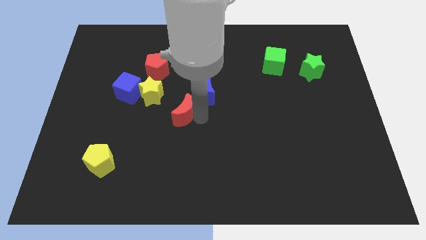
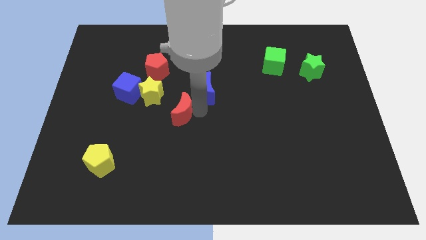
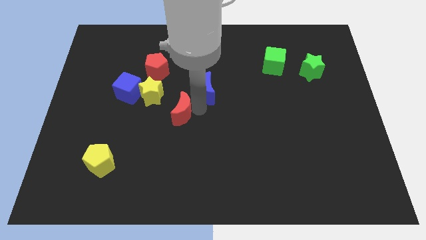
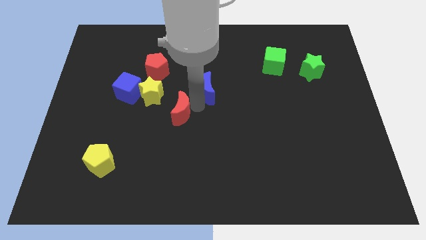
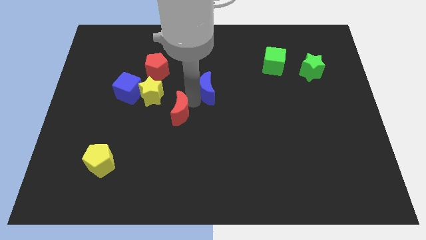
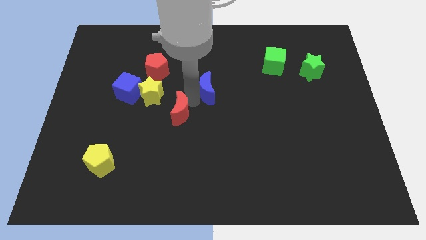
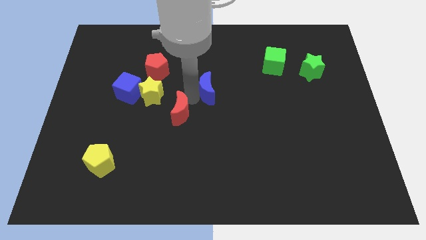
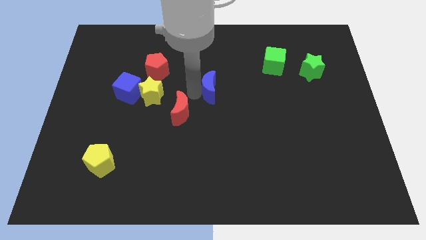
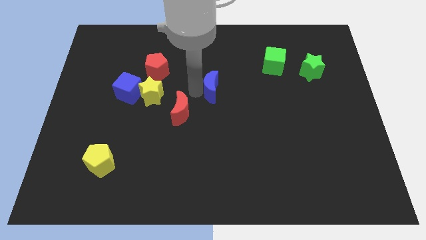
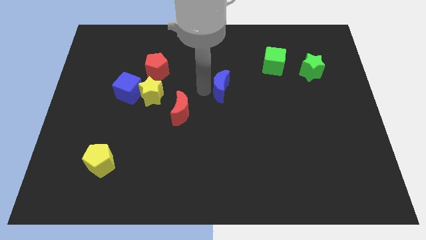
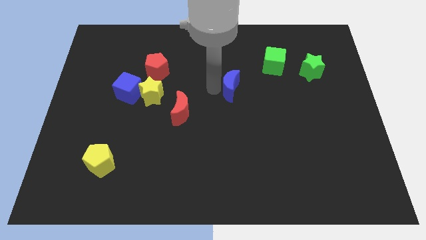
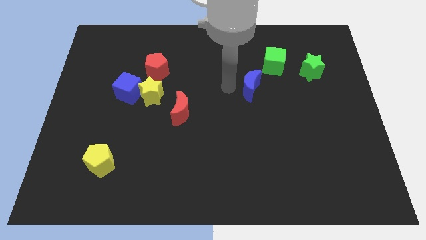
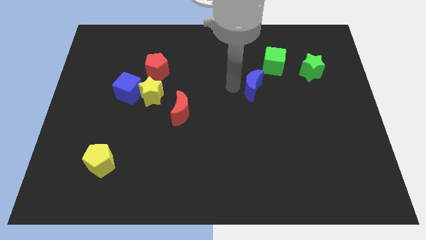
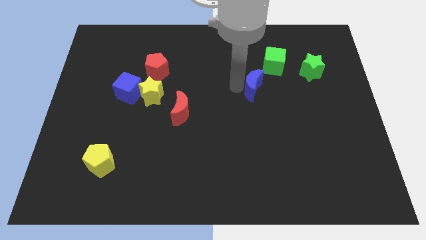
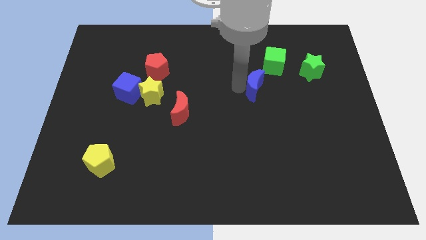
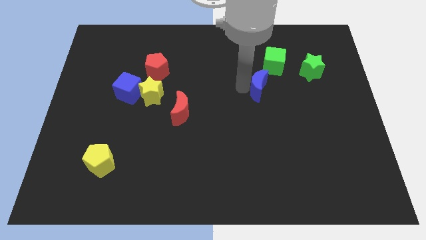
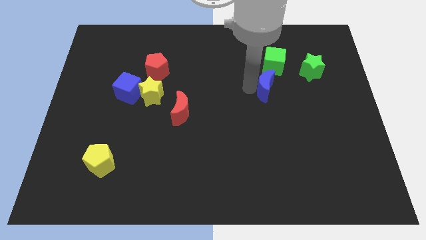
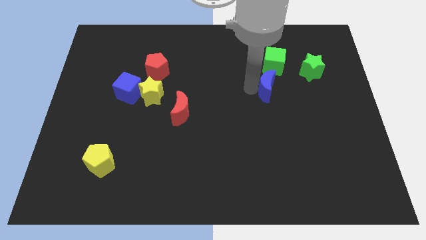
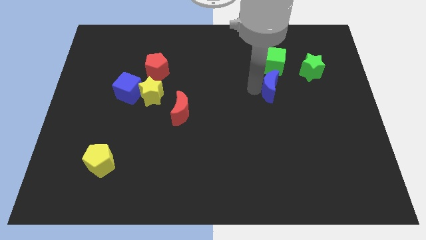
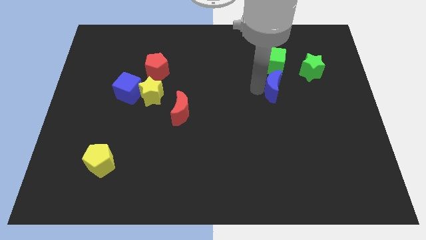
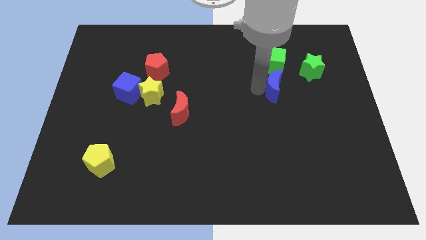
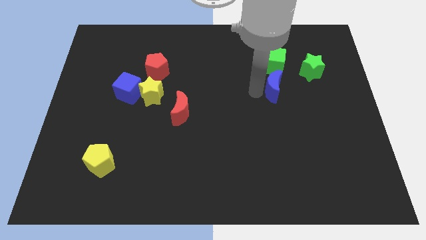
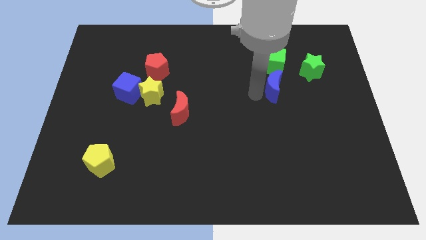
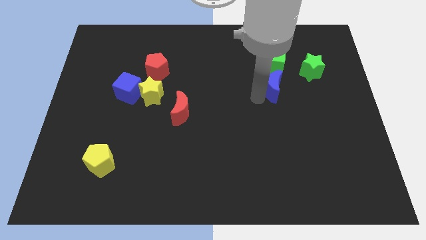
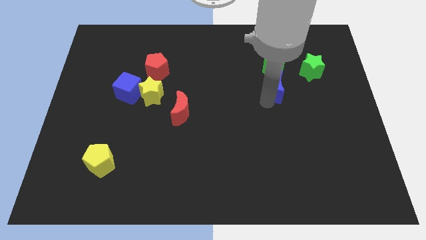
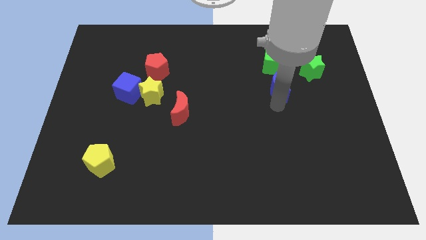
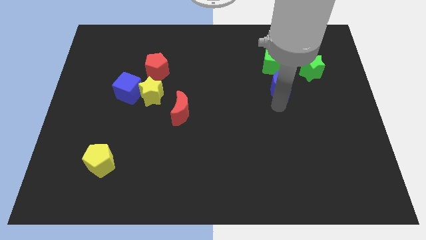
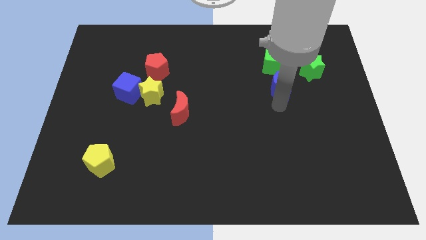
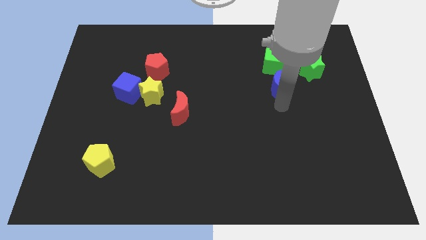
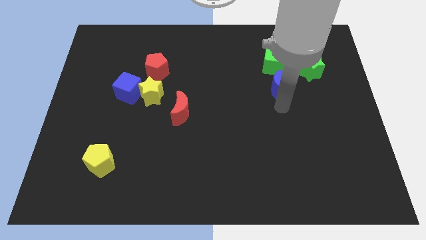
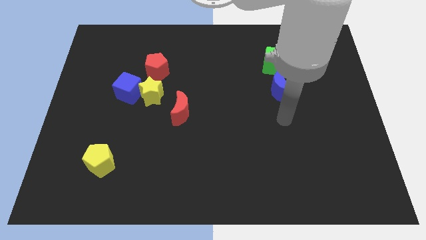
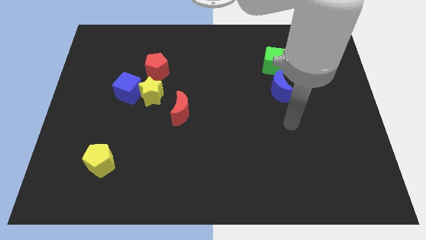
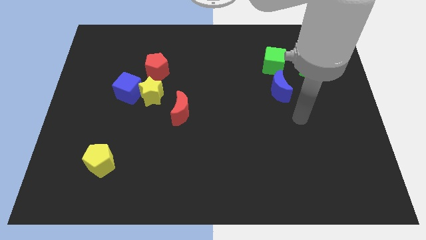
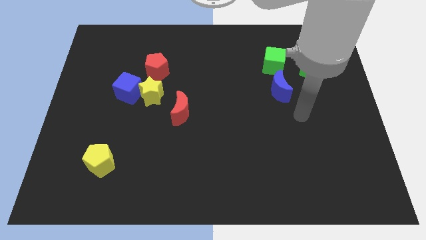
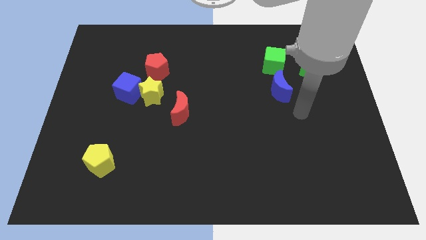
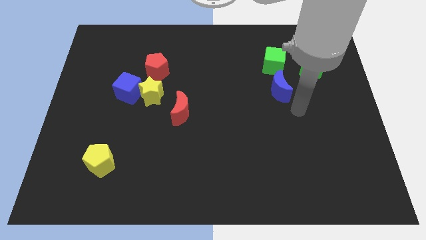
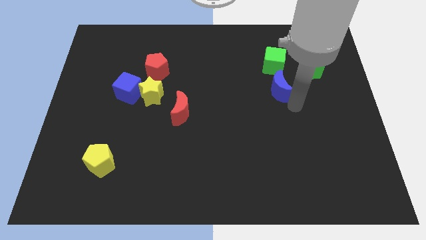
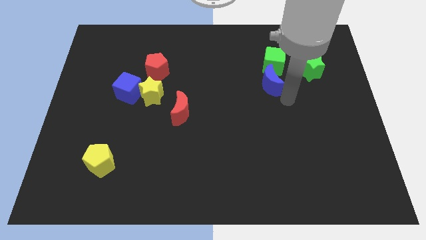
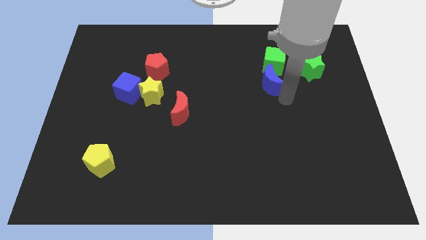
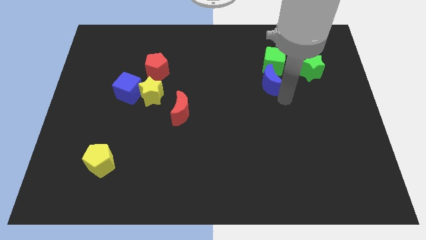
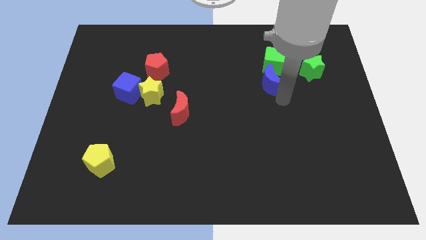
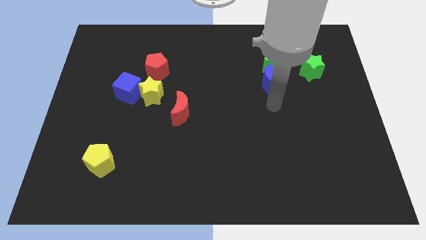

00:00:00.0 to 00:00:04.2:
slide the blue crescent below the green cube

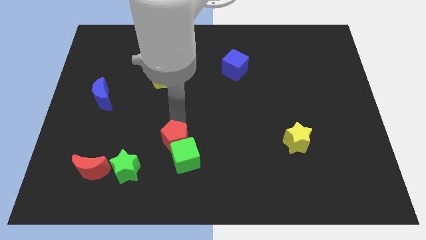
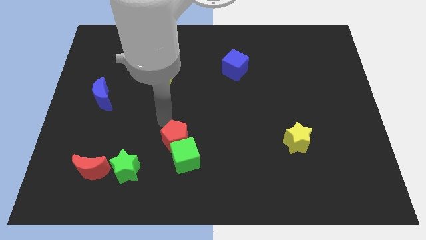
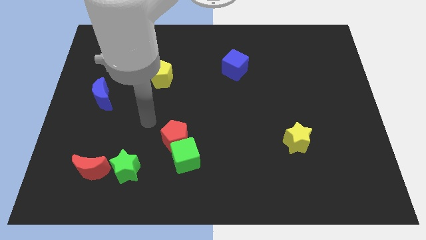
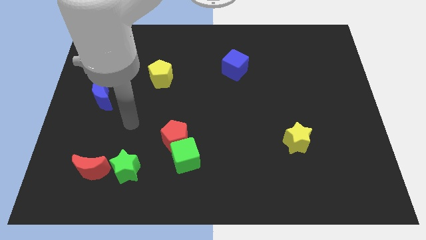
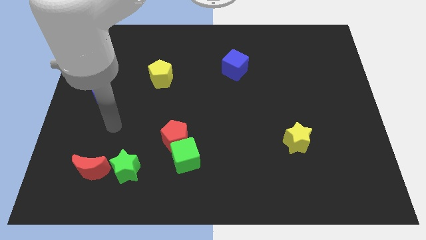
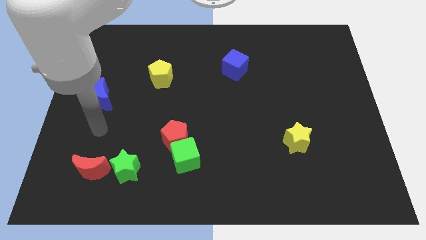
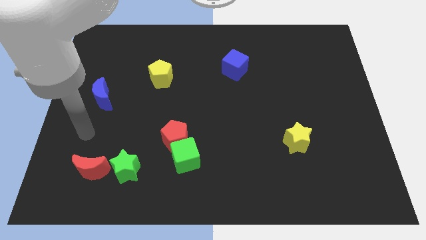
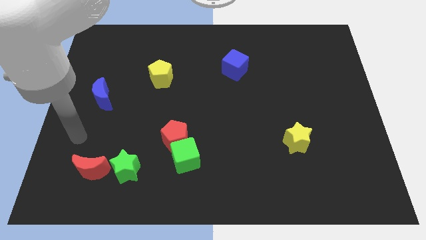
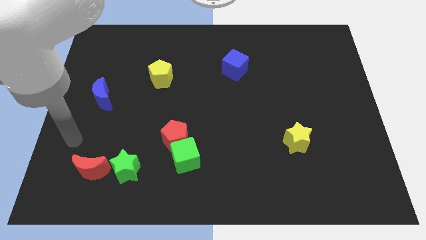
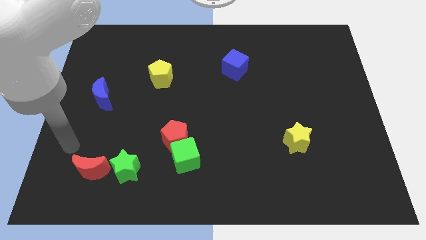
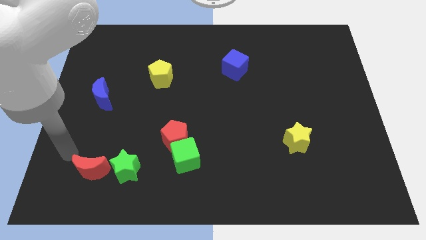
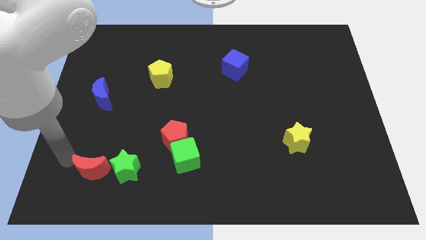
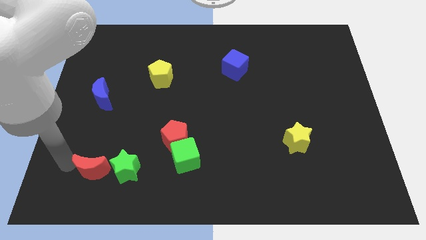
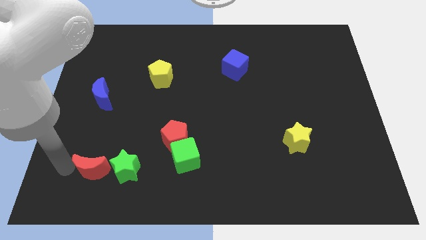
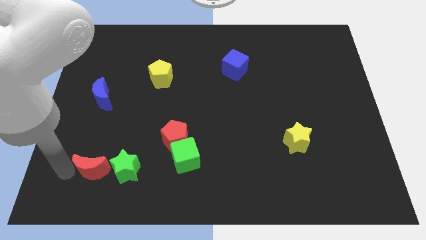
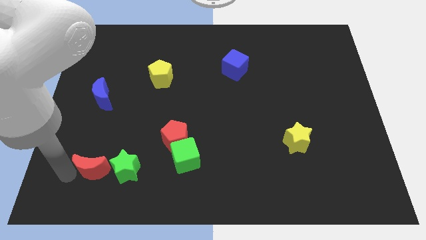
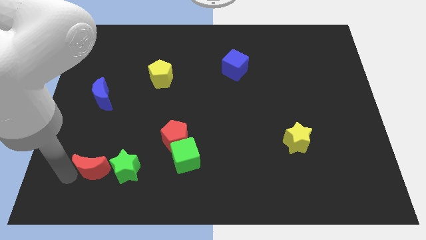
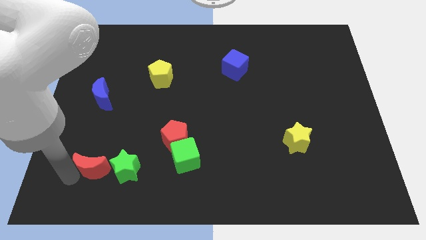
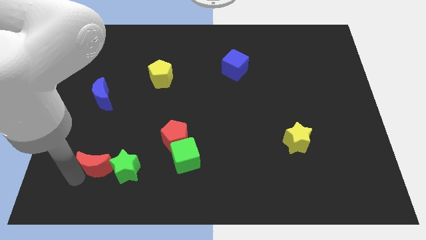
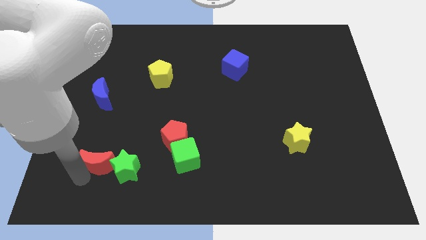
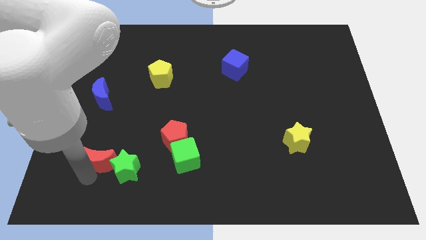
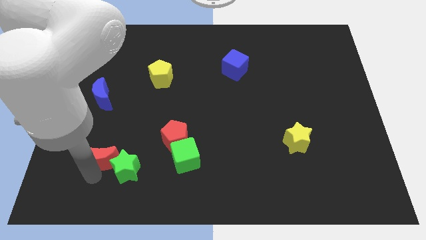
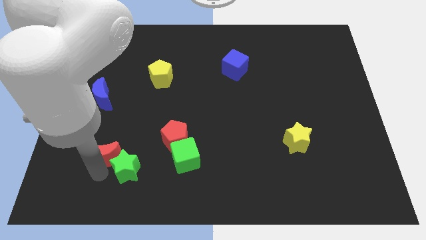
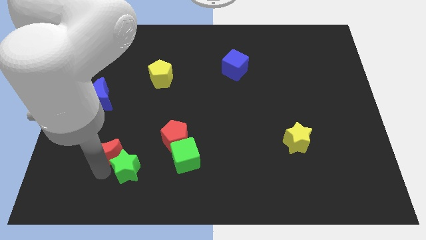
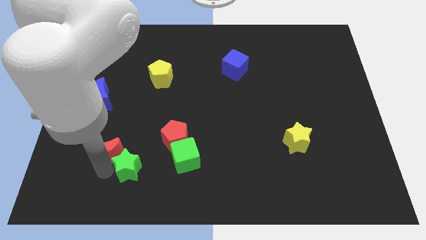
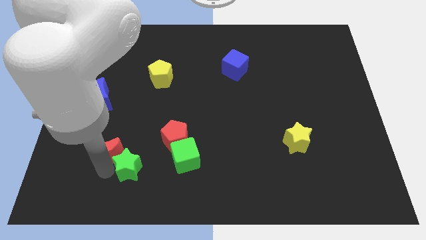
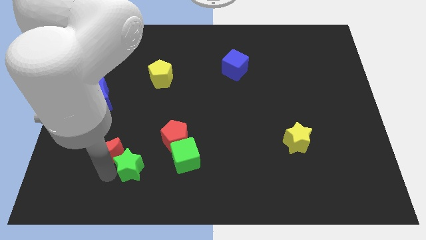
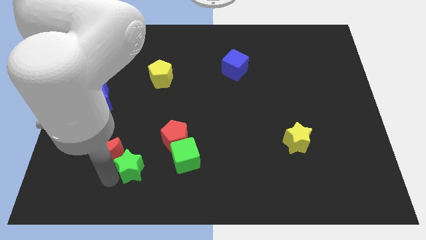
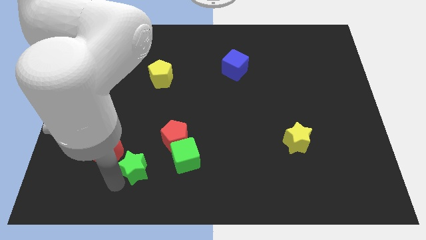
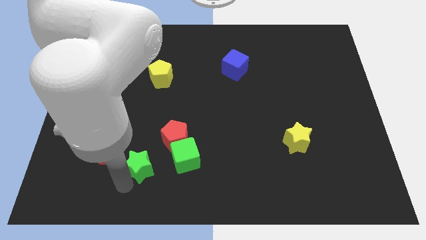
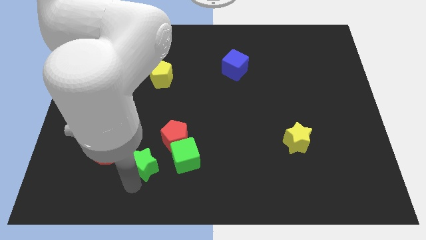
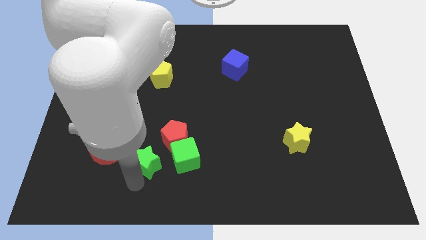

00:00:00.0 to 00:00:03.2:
separate the red crescent and green star

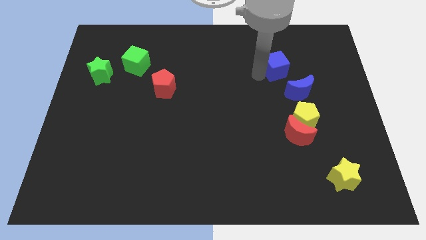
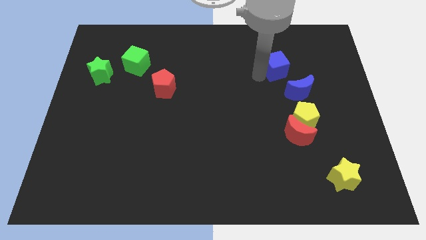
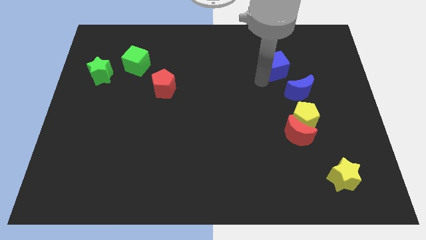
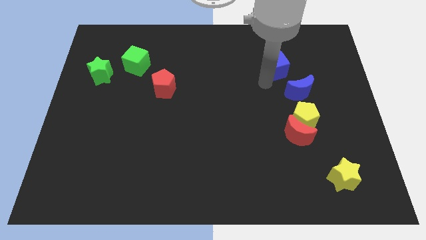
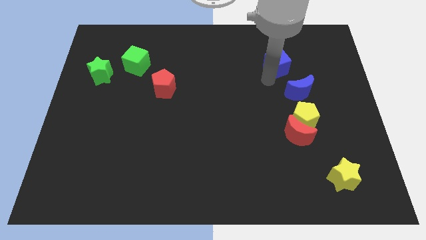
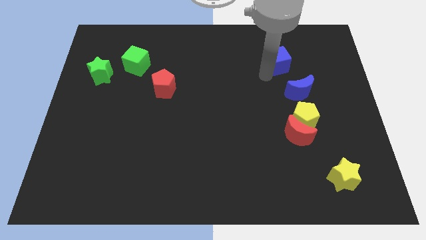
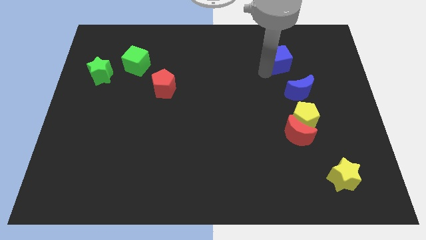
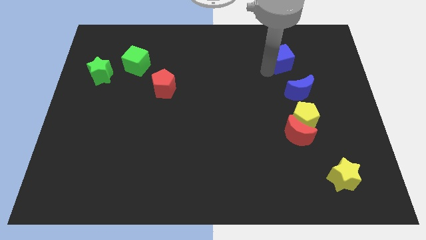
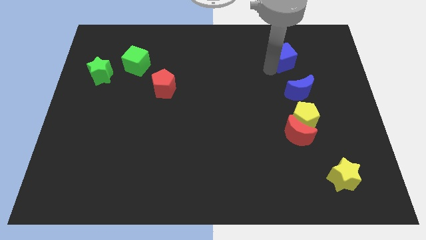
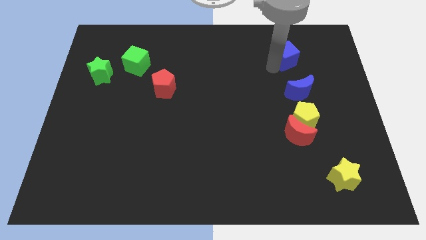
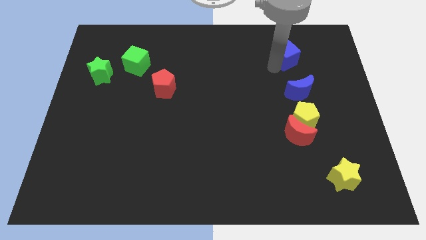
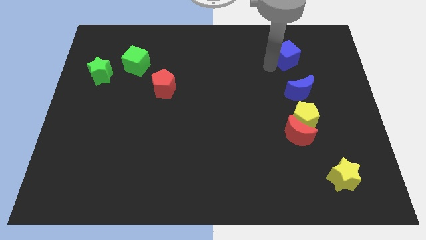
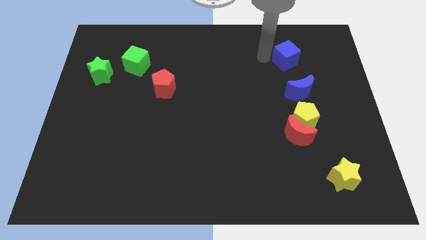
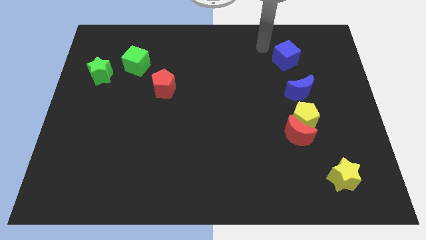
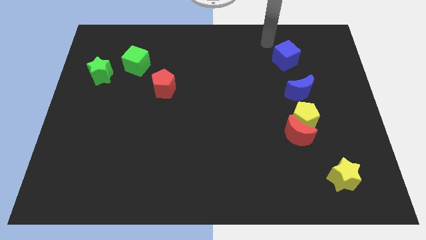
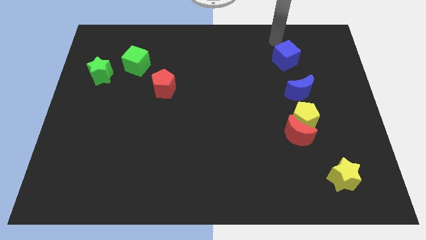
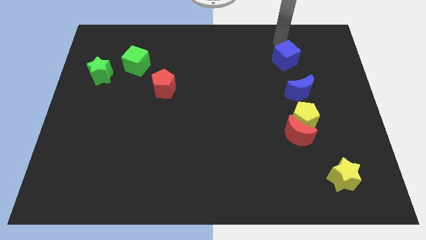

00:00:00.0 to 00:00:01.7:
push the blue cube to the top left side of the blue crescent
